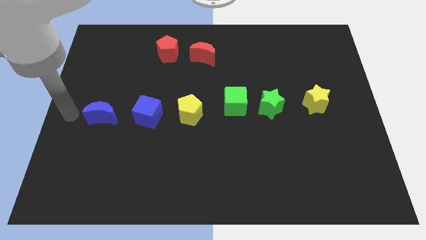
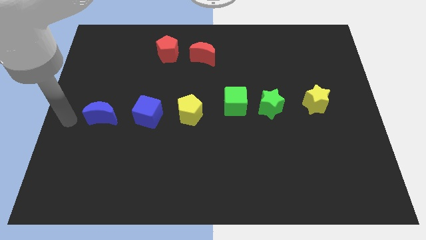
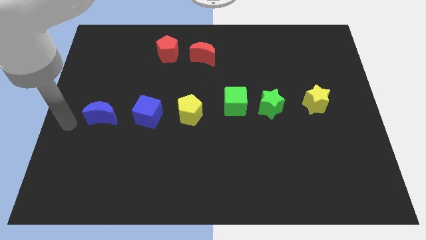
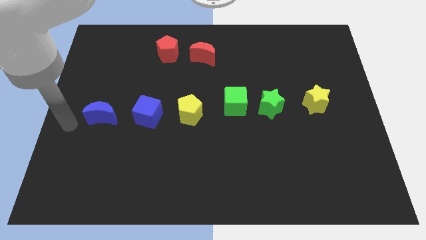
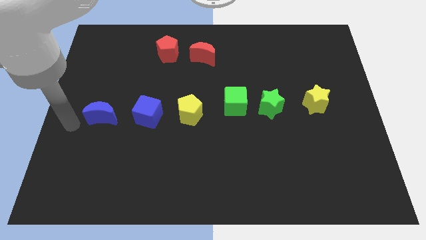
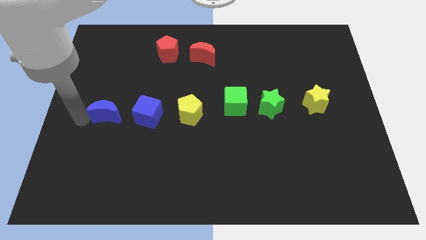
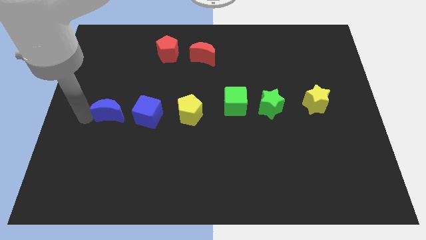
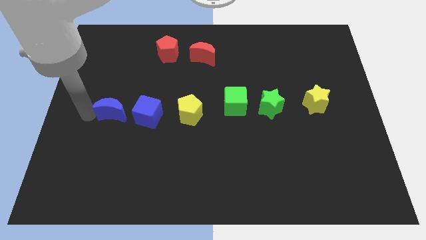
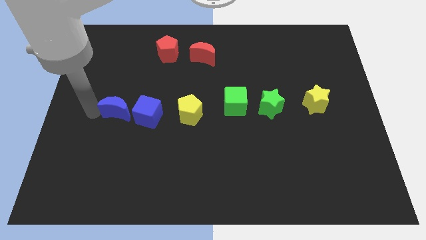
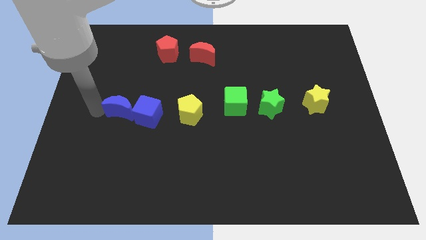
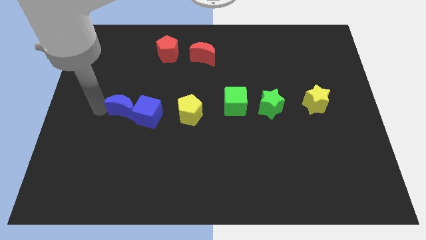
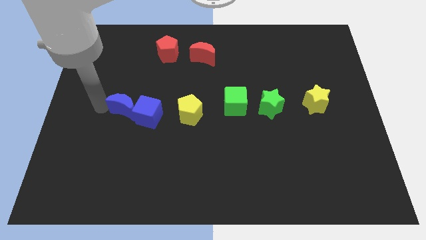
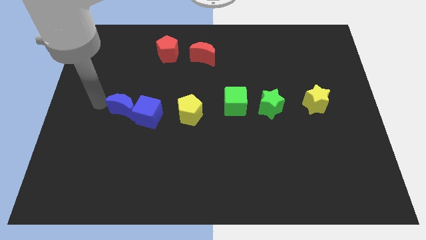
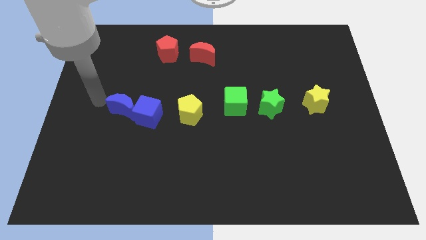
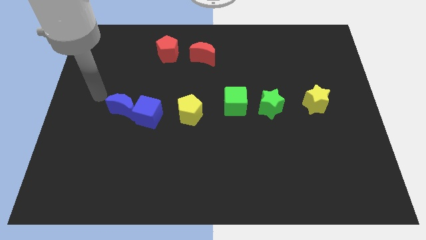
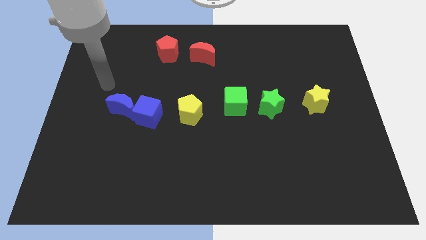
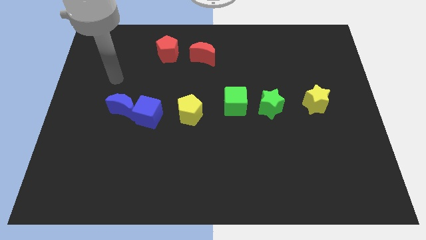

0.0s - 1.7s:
push the blue crescent into blue cube

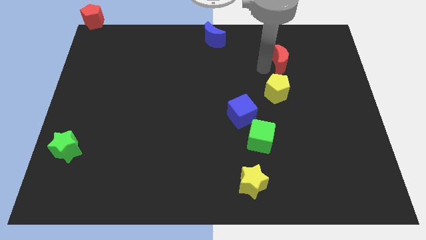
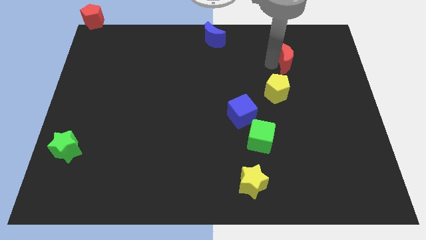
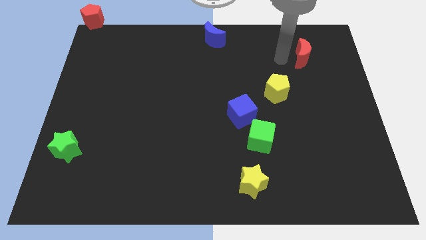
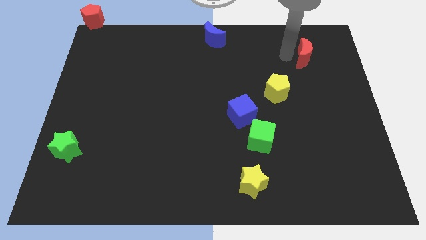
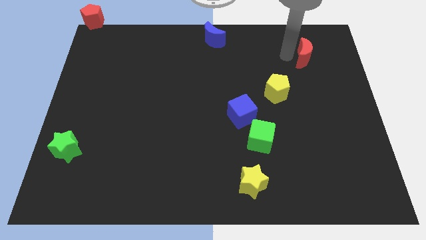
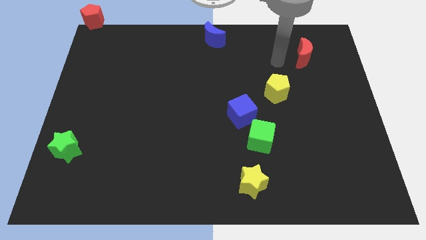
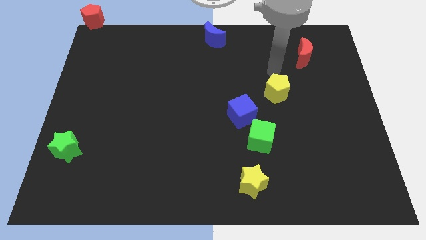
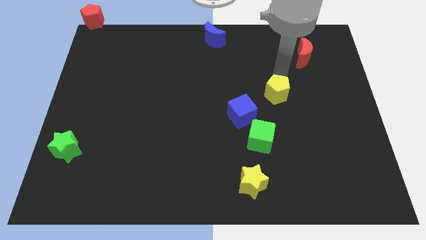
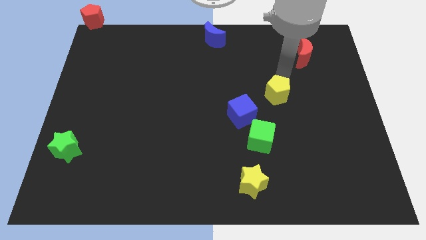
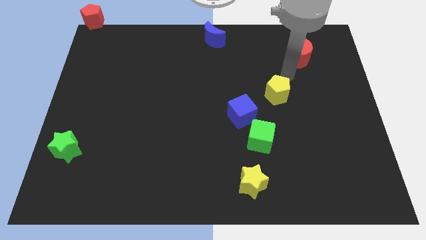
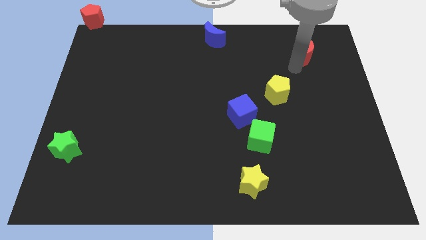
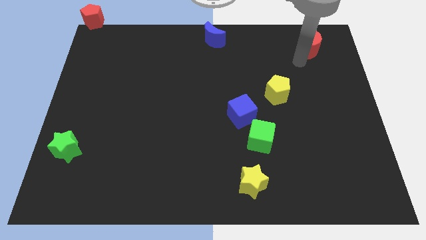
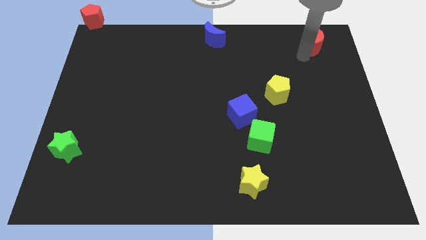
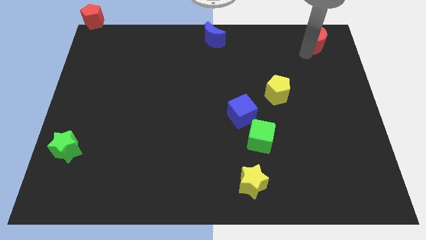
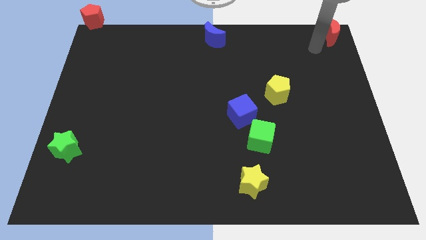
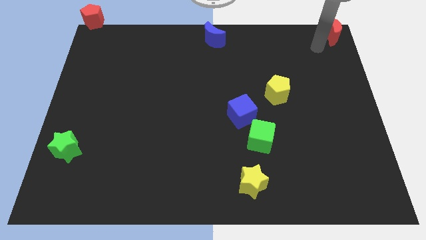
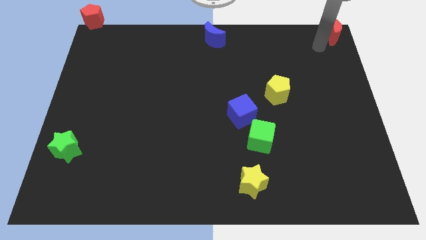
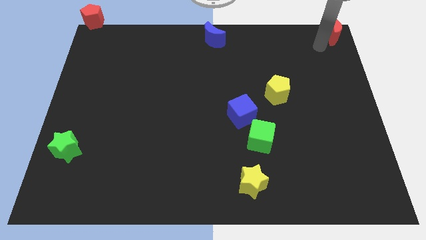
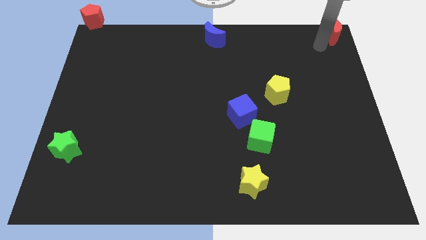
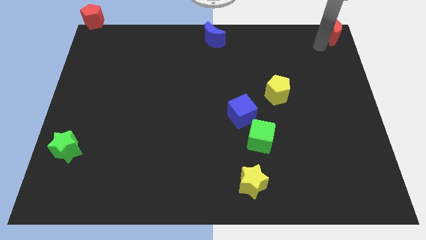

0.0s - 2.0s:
move red moon diagonally top right to the yellow pentagon

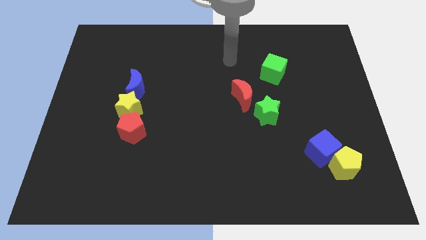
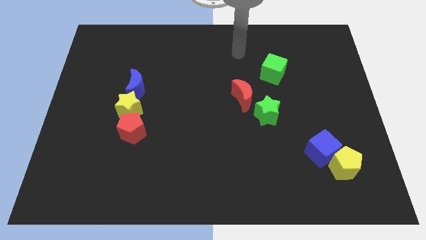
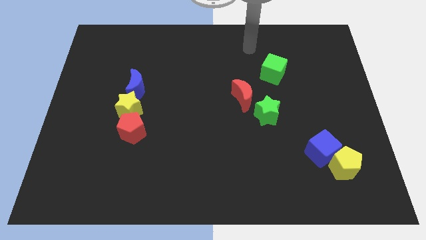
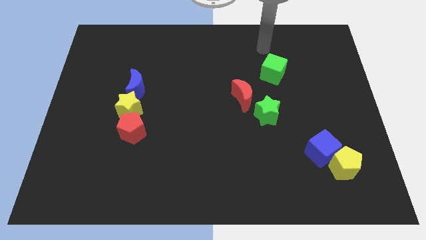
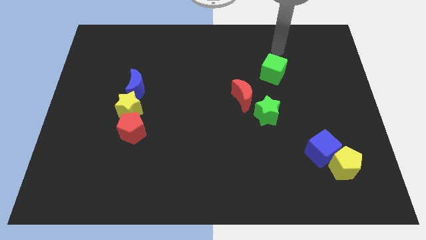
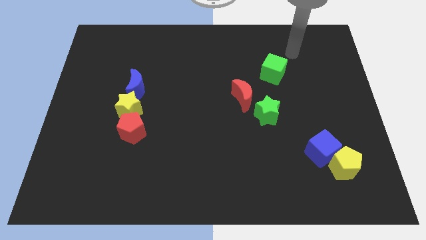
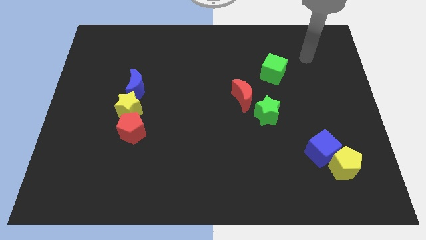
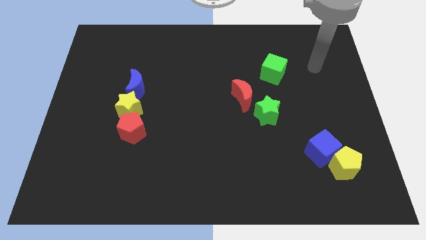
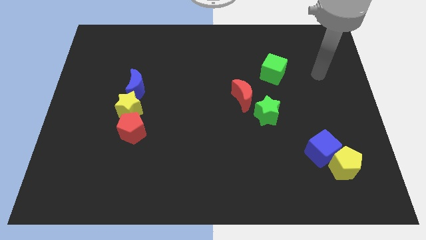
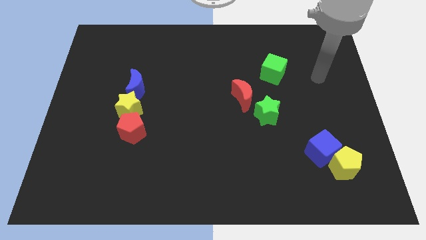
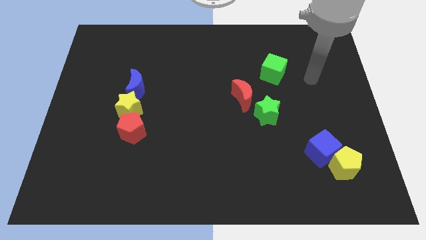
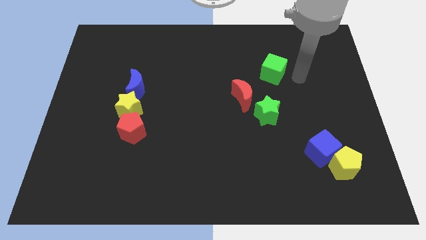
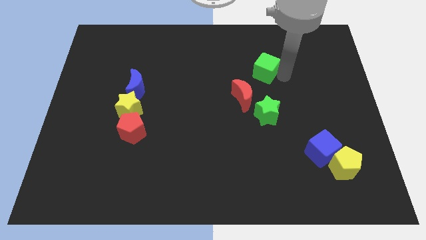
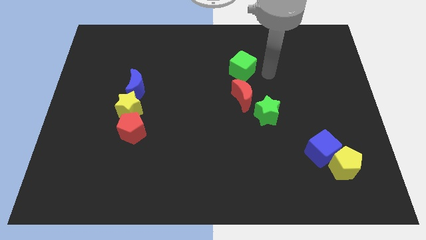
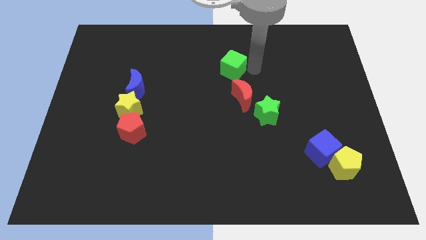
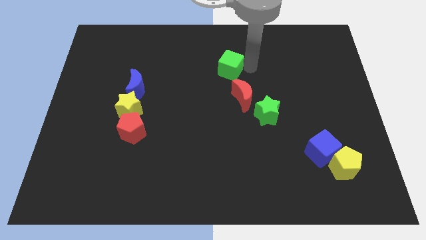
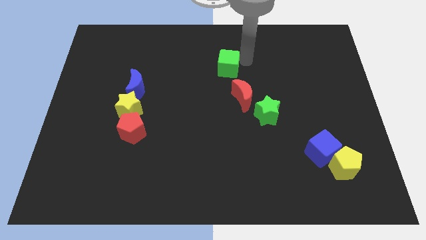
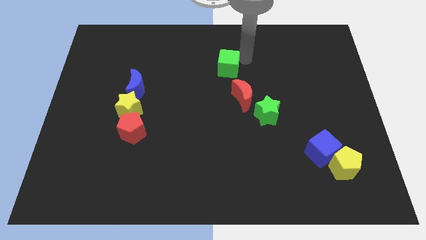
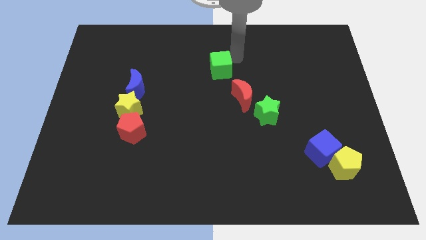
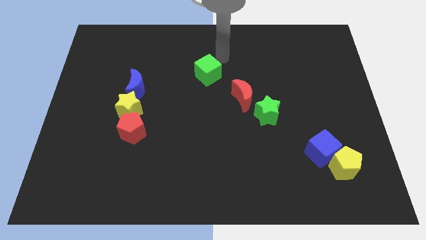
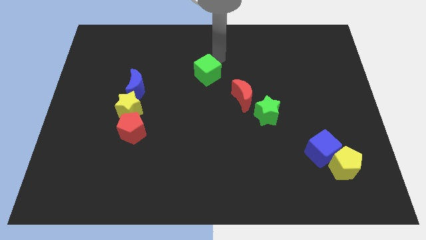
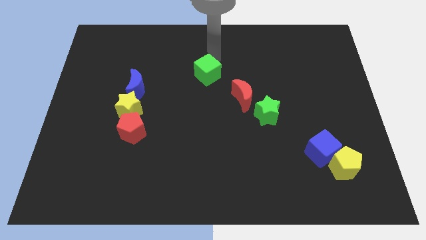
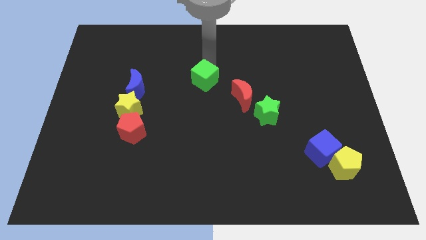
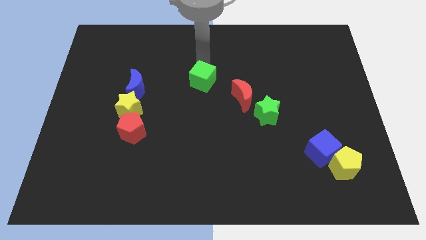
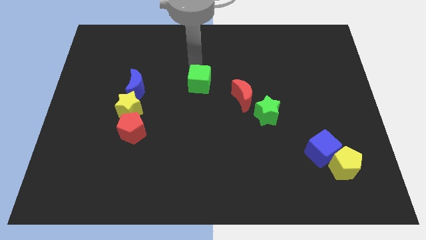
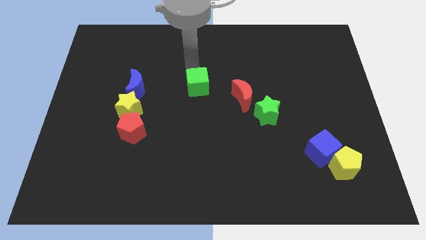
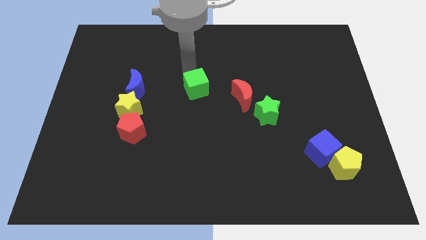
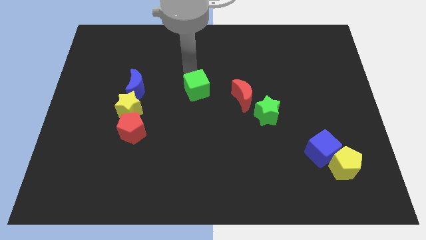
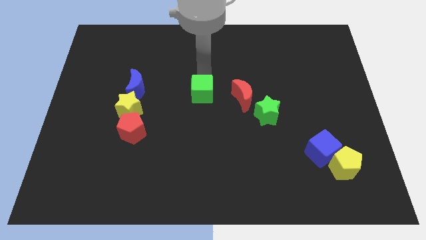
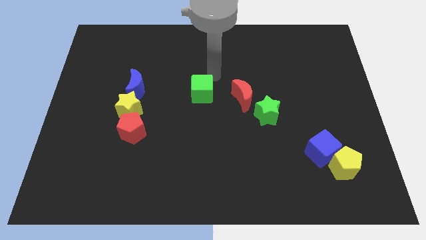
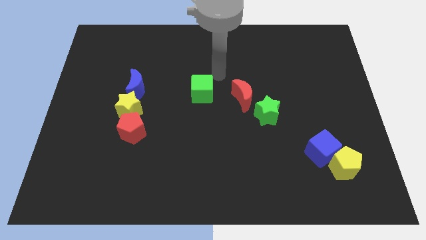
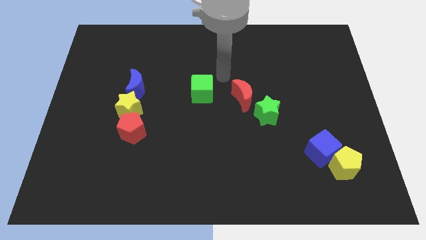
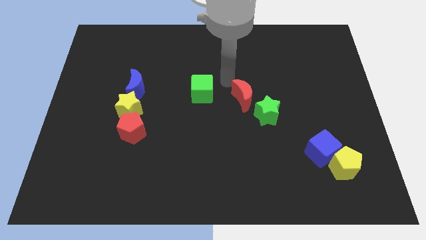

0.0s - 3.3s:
place the green cube at the center of the board

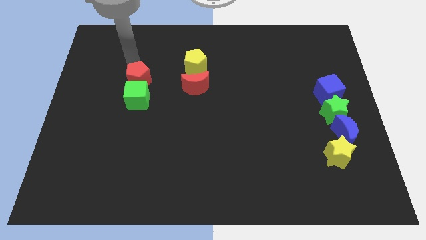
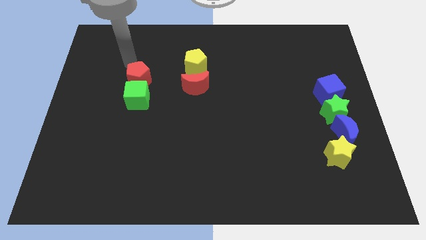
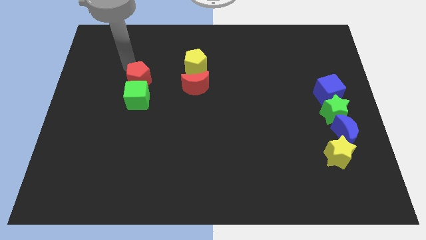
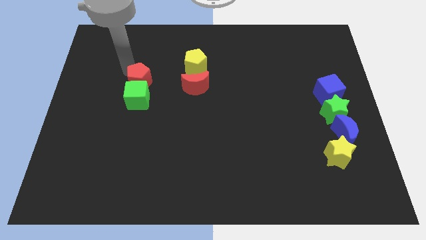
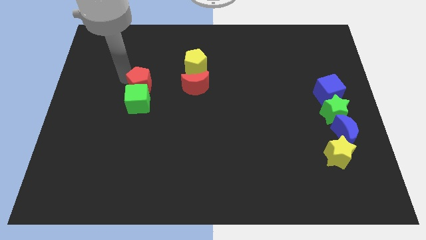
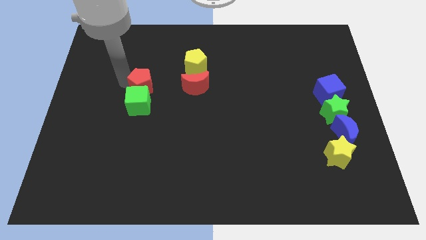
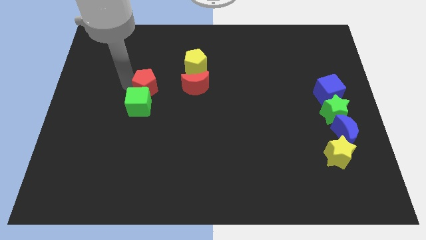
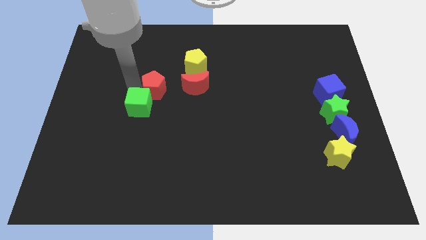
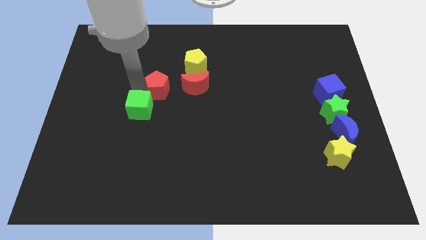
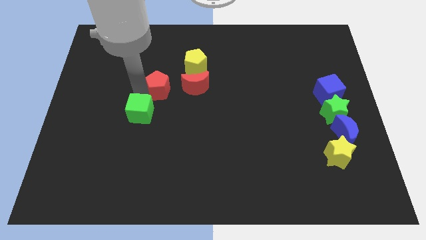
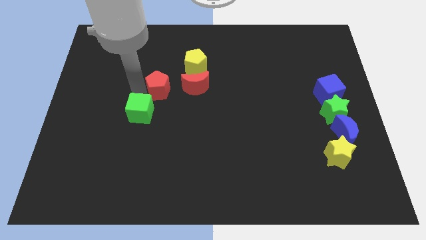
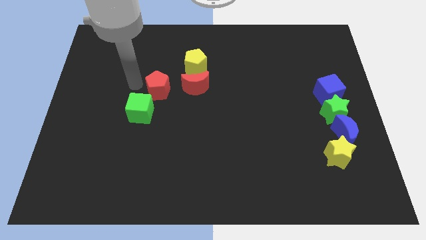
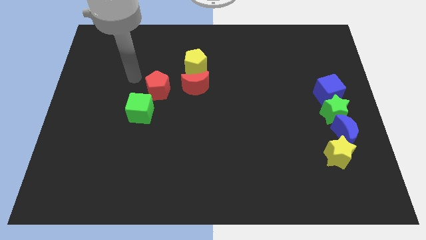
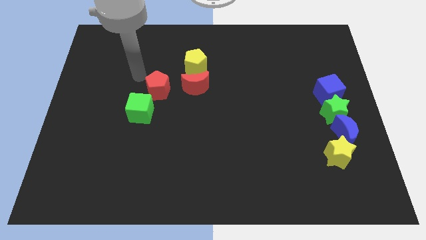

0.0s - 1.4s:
move arm into red pentagon and green cube

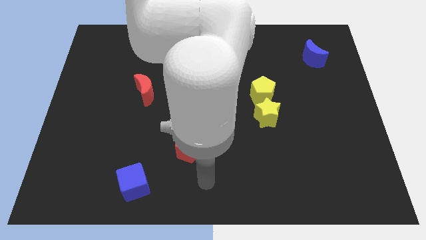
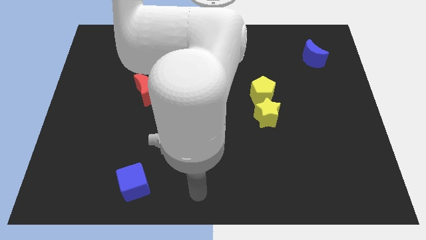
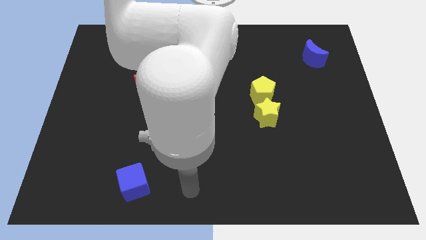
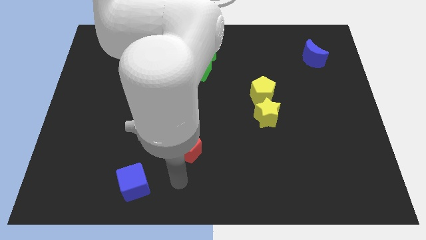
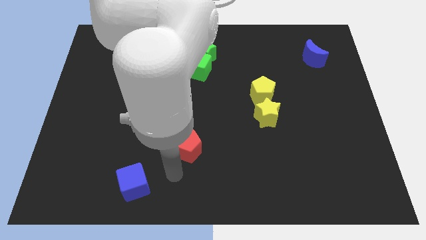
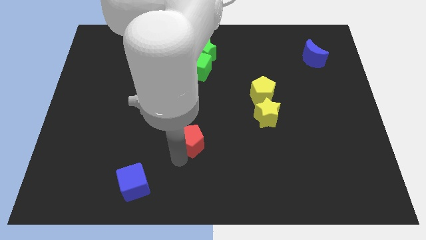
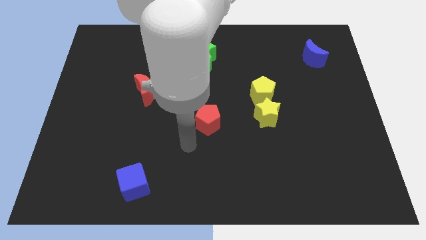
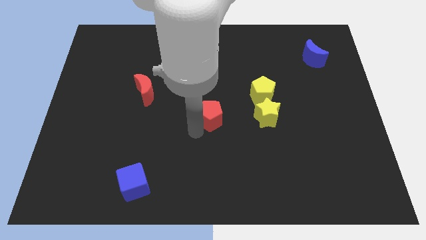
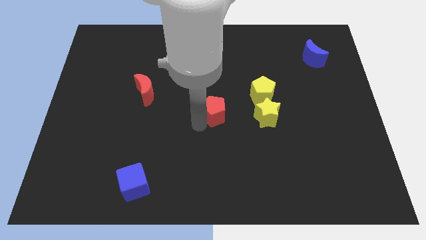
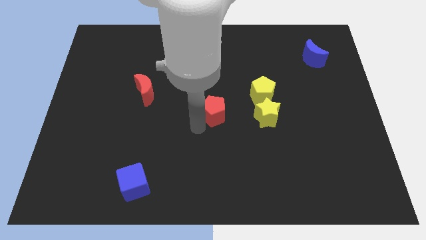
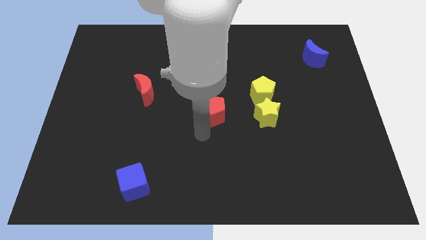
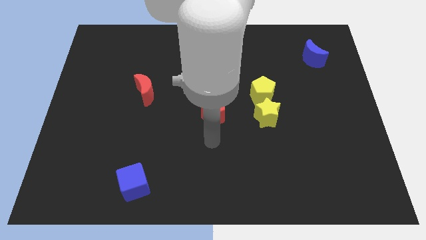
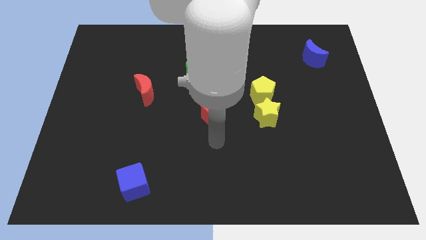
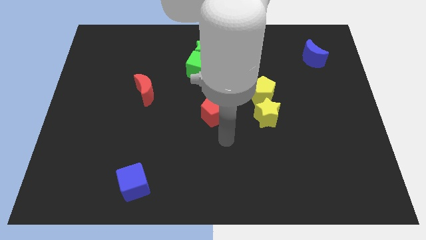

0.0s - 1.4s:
move the red pentagon to the left of the yellow star
